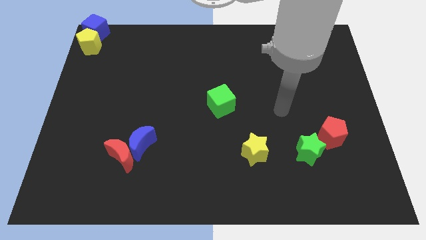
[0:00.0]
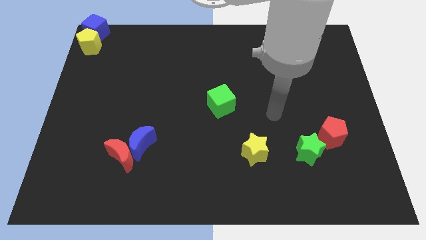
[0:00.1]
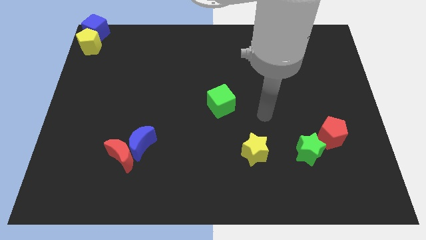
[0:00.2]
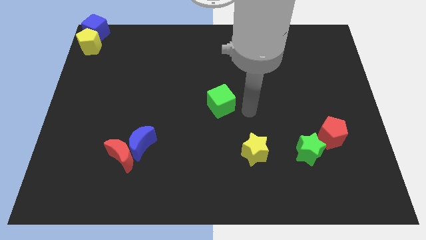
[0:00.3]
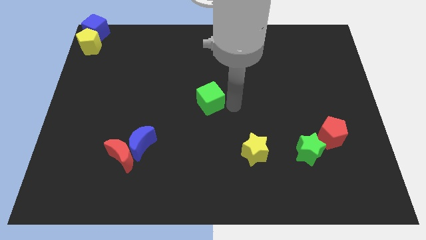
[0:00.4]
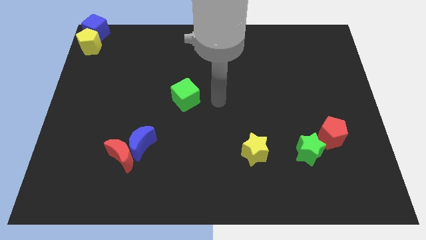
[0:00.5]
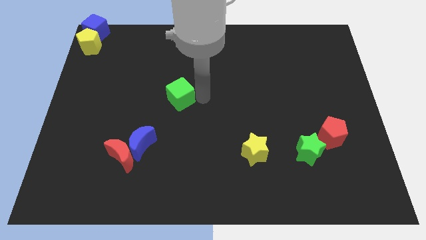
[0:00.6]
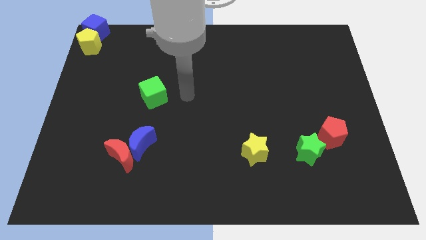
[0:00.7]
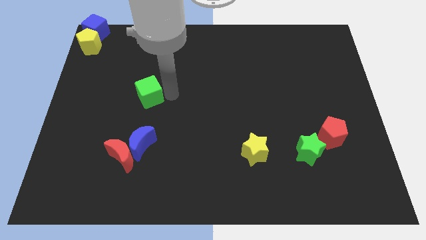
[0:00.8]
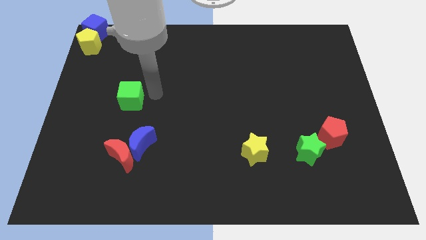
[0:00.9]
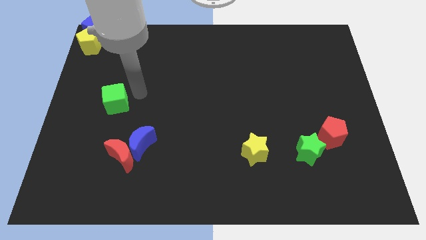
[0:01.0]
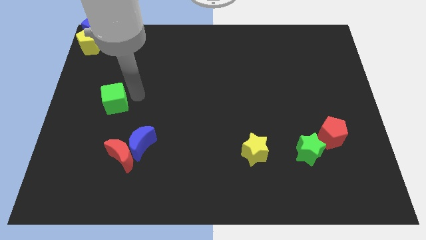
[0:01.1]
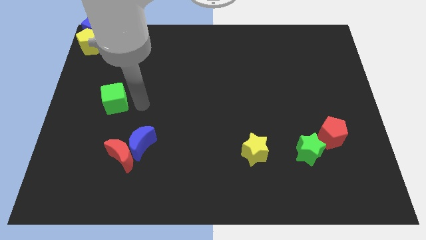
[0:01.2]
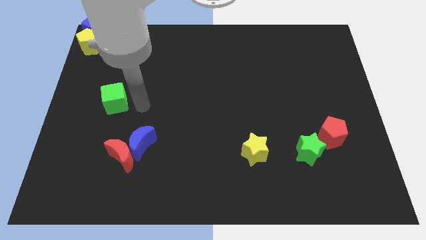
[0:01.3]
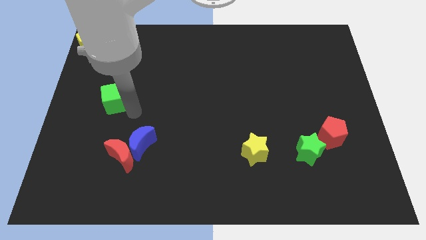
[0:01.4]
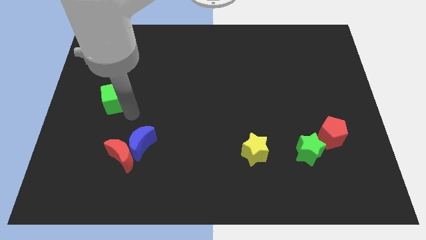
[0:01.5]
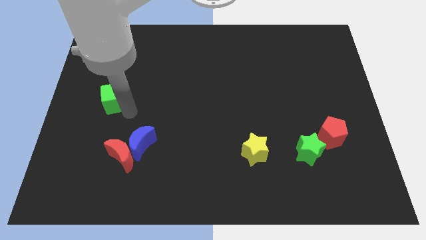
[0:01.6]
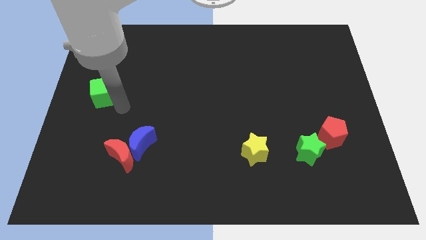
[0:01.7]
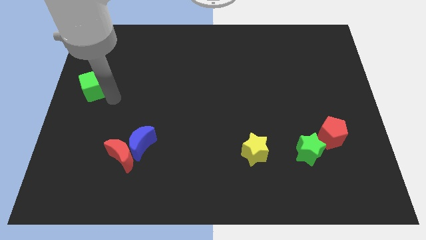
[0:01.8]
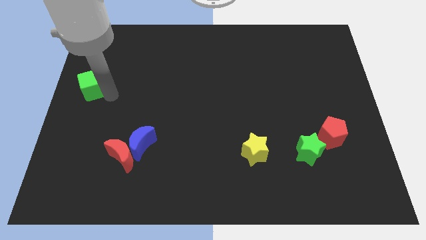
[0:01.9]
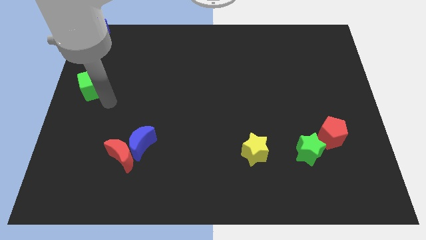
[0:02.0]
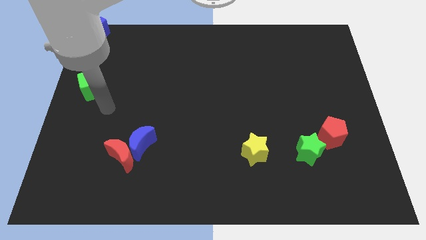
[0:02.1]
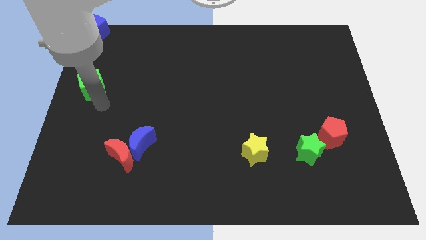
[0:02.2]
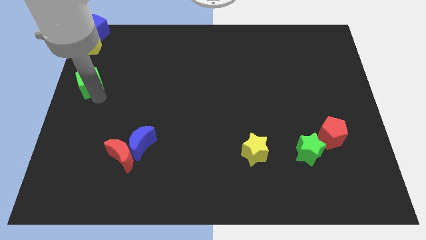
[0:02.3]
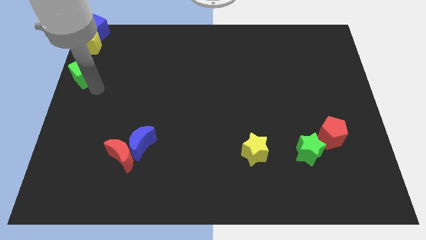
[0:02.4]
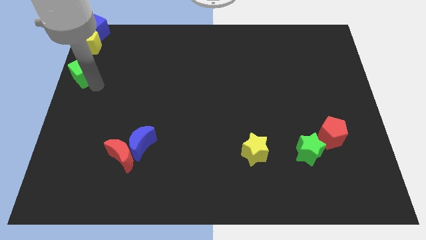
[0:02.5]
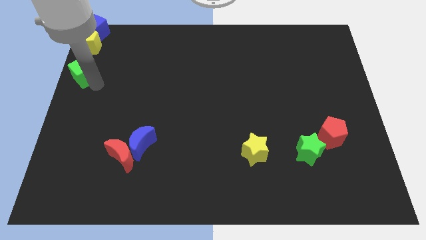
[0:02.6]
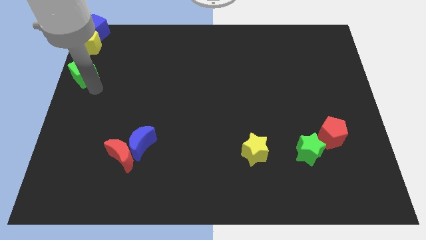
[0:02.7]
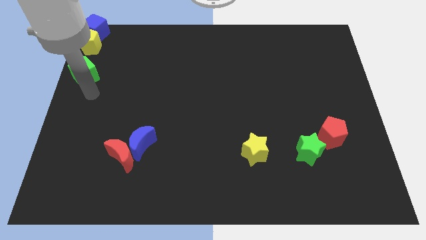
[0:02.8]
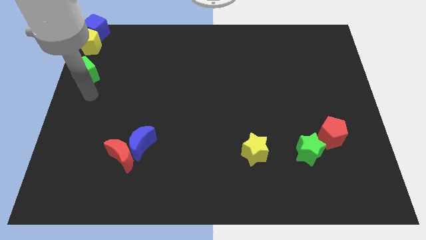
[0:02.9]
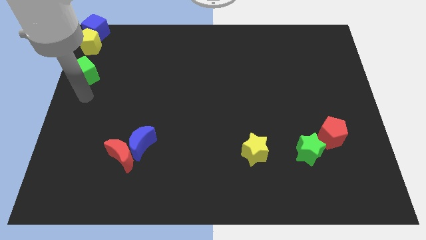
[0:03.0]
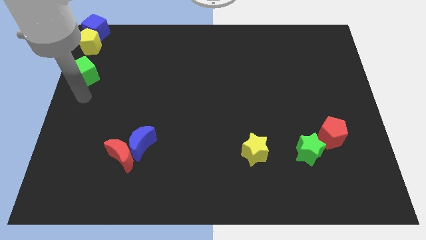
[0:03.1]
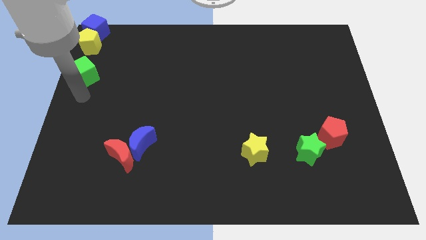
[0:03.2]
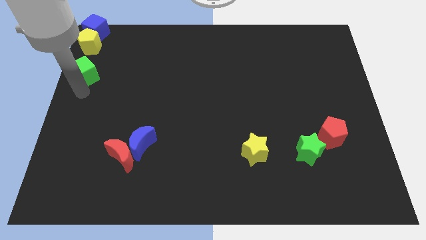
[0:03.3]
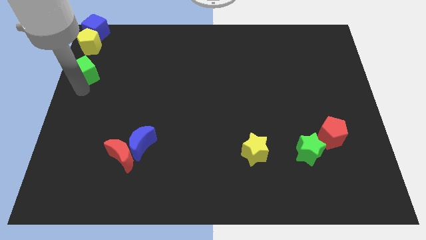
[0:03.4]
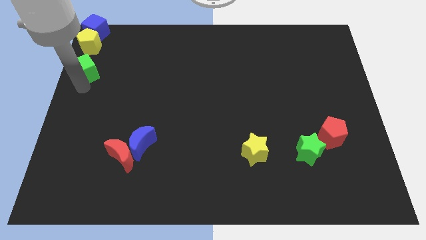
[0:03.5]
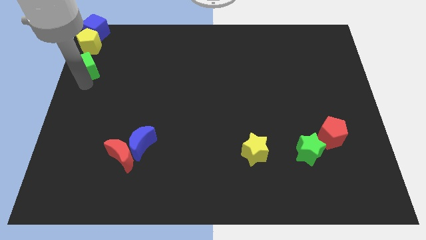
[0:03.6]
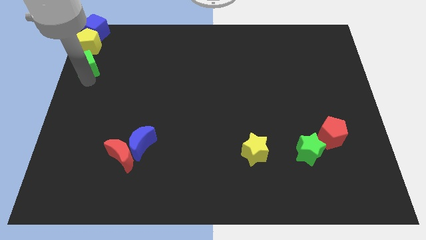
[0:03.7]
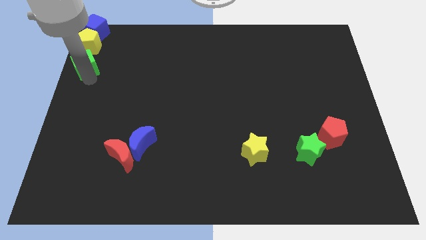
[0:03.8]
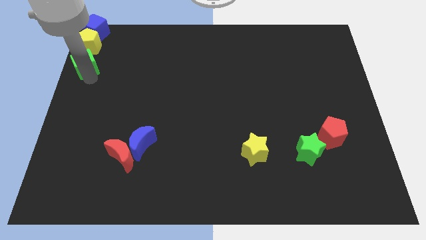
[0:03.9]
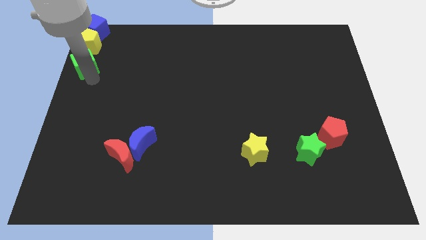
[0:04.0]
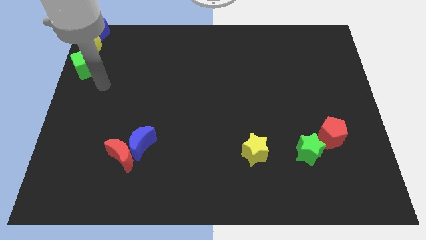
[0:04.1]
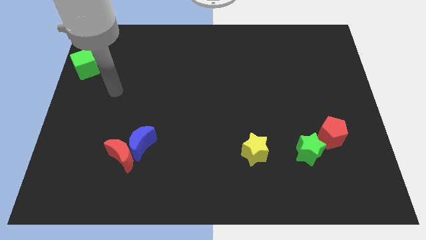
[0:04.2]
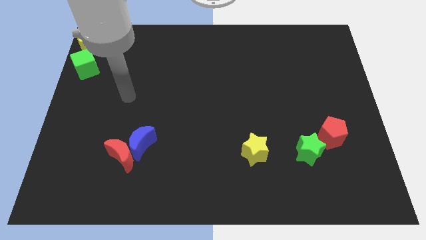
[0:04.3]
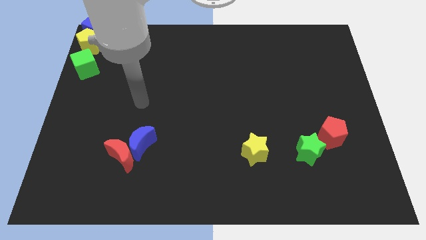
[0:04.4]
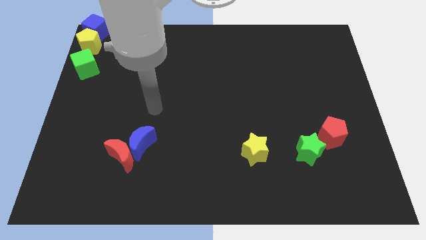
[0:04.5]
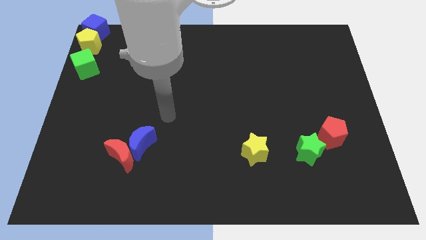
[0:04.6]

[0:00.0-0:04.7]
put the green cube below the yellow pentagon

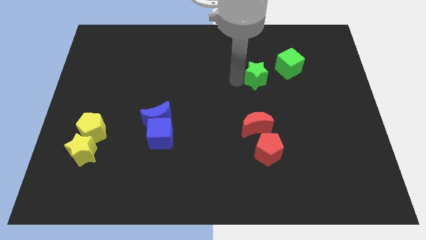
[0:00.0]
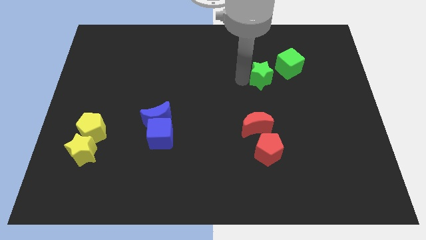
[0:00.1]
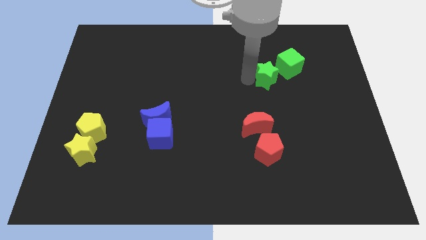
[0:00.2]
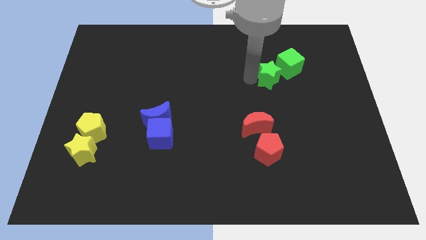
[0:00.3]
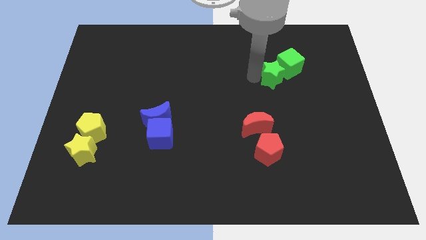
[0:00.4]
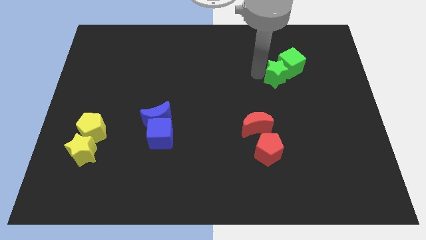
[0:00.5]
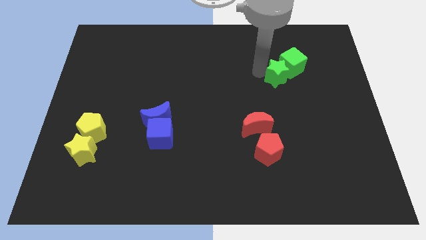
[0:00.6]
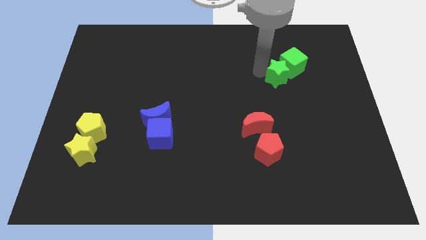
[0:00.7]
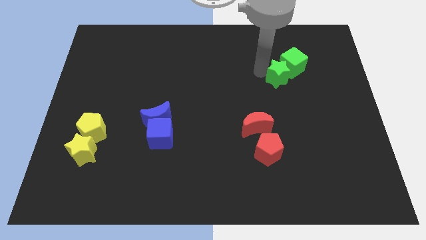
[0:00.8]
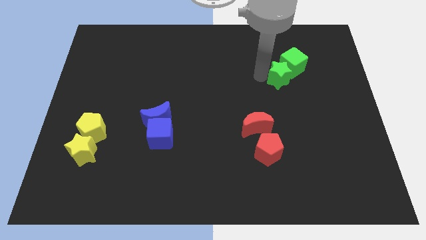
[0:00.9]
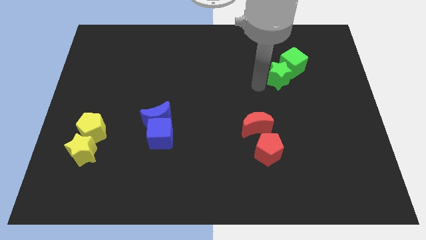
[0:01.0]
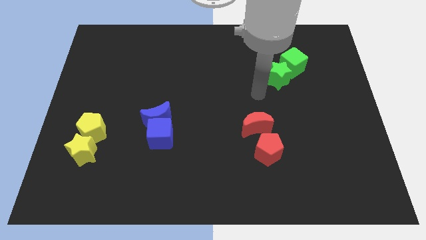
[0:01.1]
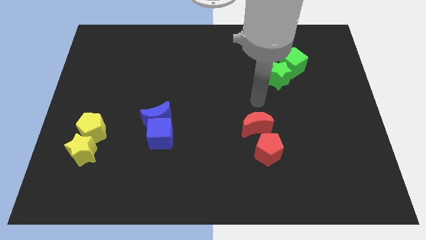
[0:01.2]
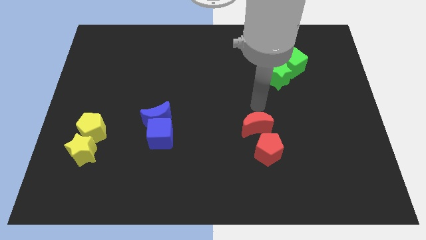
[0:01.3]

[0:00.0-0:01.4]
push the green star into green cube

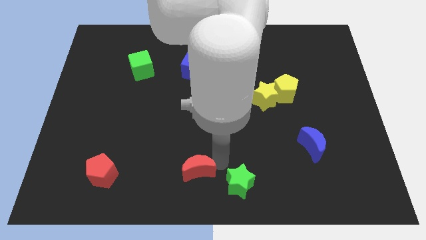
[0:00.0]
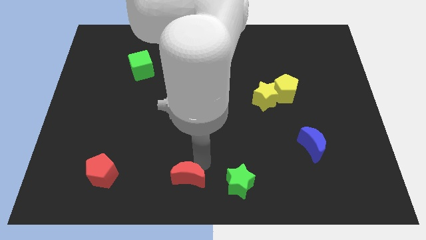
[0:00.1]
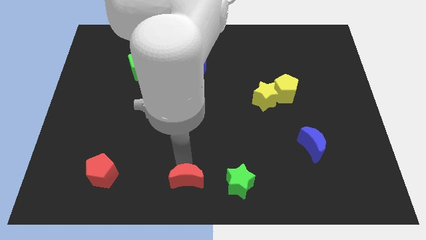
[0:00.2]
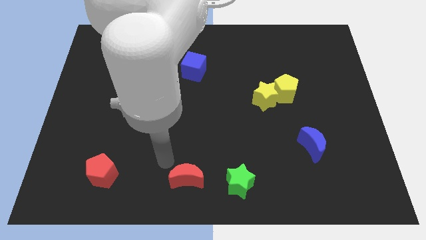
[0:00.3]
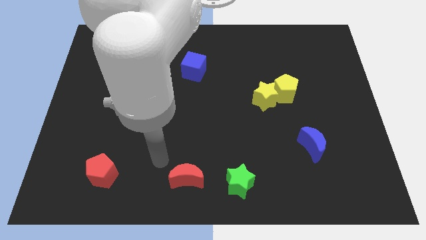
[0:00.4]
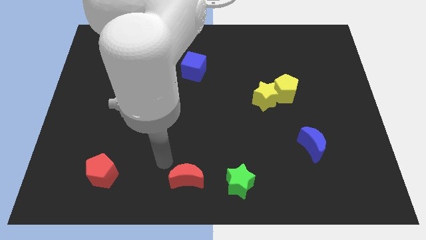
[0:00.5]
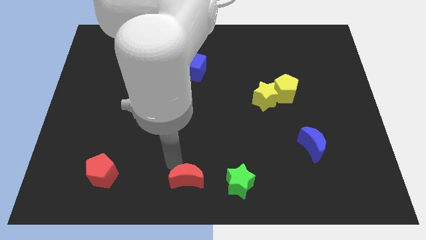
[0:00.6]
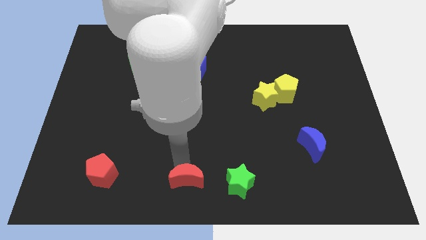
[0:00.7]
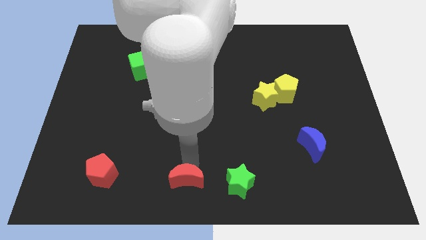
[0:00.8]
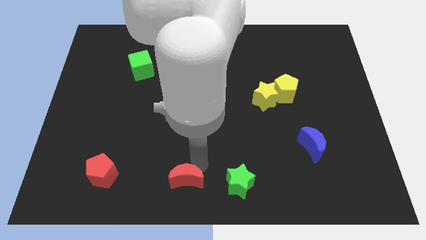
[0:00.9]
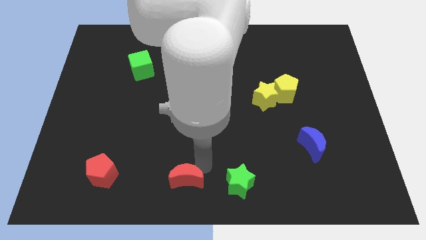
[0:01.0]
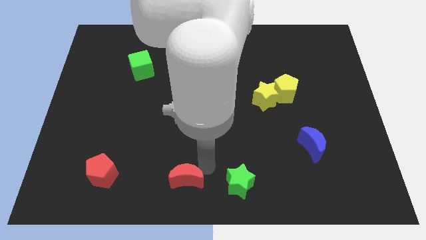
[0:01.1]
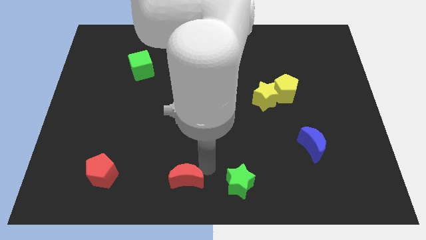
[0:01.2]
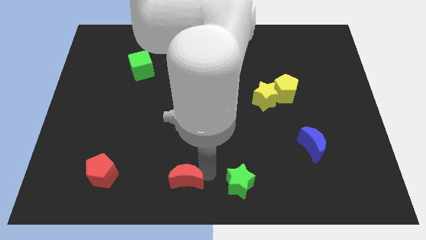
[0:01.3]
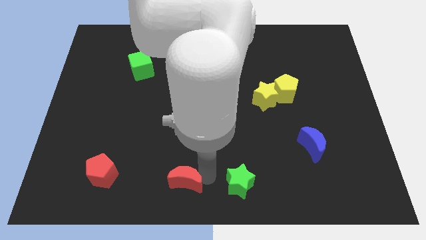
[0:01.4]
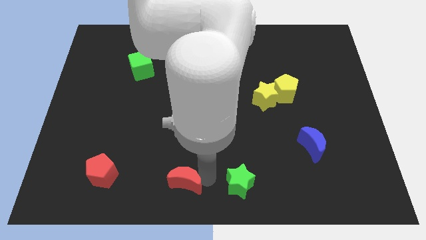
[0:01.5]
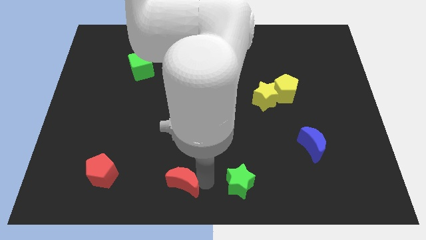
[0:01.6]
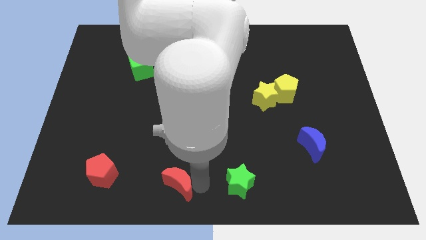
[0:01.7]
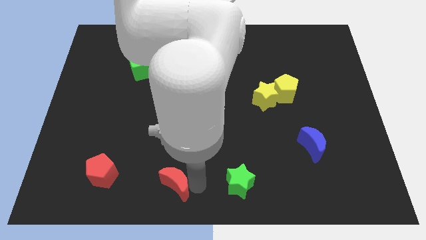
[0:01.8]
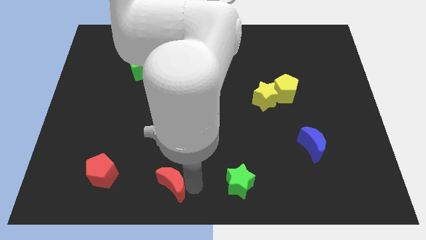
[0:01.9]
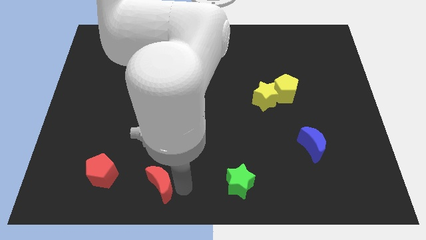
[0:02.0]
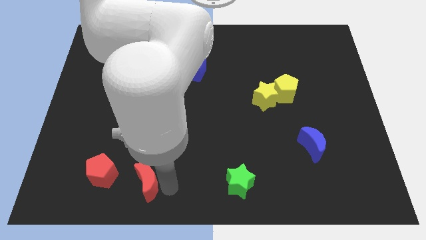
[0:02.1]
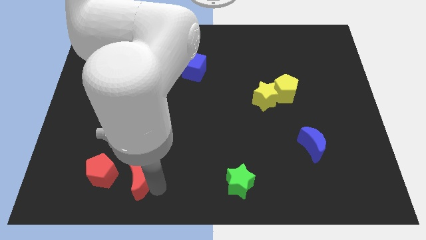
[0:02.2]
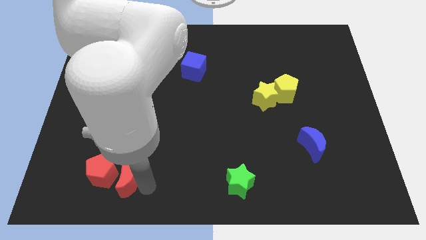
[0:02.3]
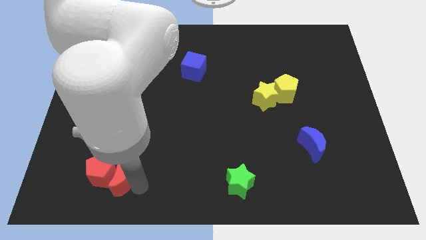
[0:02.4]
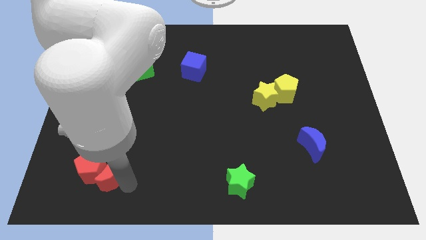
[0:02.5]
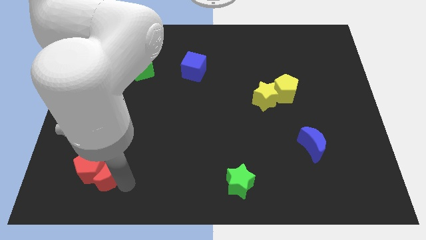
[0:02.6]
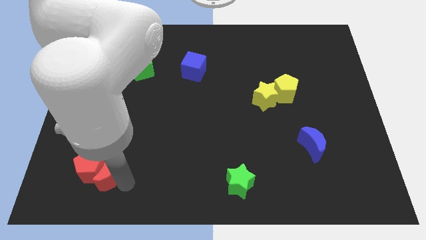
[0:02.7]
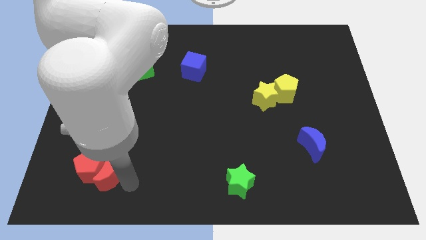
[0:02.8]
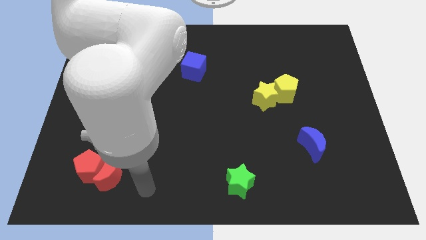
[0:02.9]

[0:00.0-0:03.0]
push the red crescent into the red pentagon
